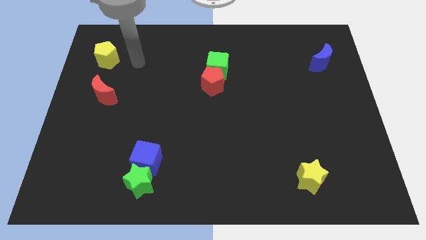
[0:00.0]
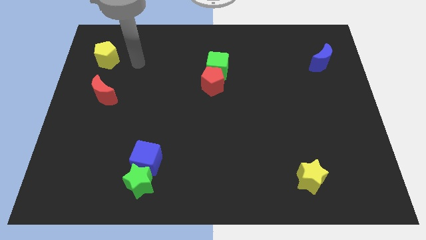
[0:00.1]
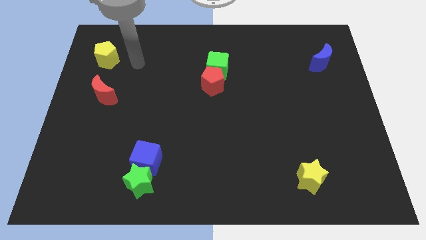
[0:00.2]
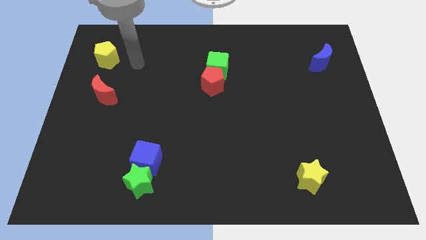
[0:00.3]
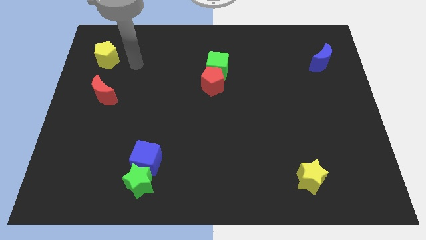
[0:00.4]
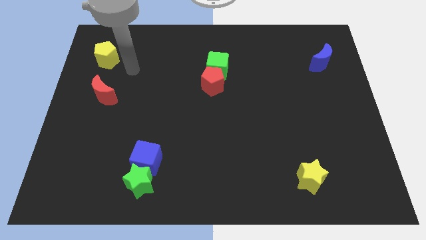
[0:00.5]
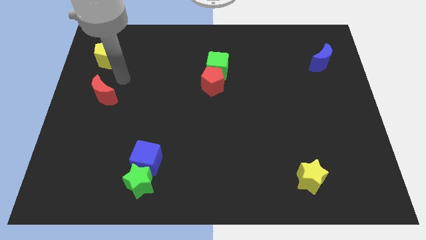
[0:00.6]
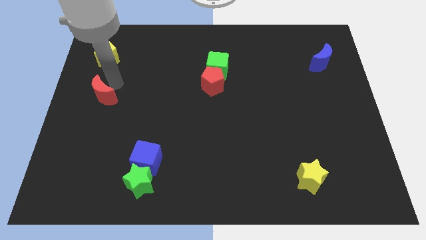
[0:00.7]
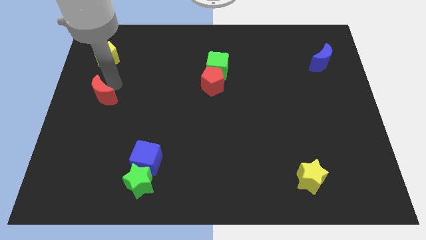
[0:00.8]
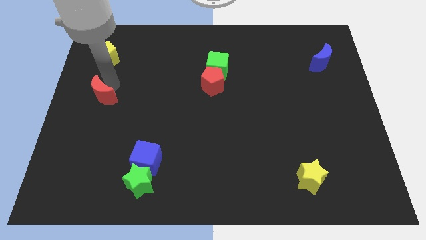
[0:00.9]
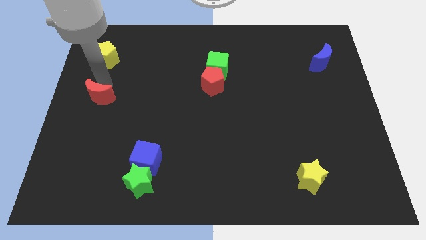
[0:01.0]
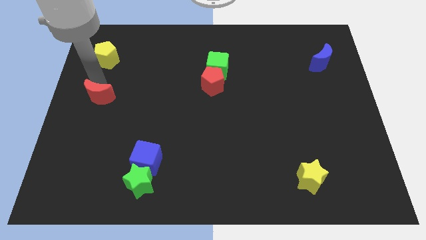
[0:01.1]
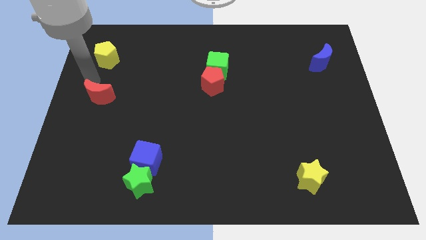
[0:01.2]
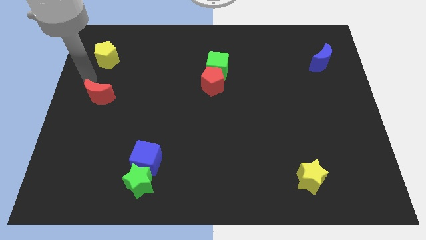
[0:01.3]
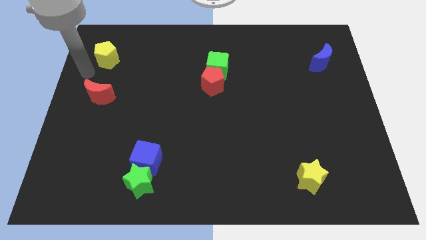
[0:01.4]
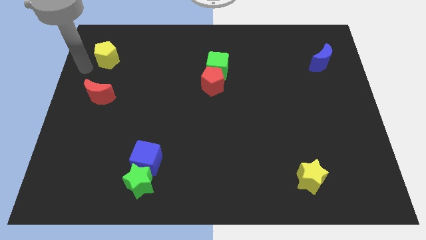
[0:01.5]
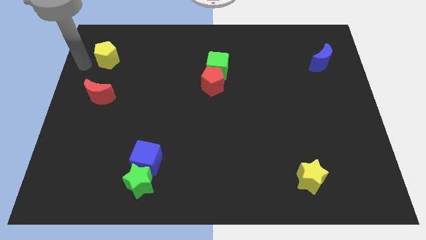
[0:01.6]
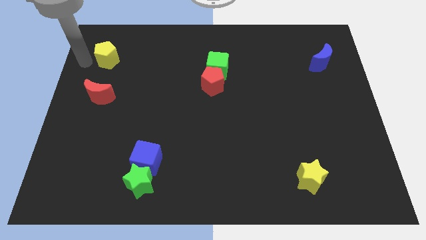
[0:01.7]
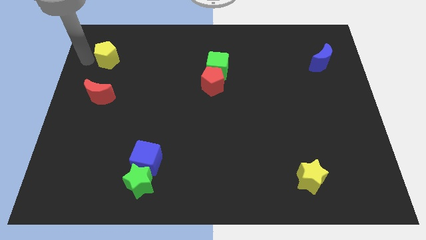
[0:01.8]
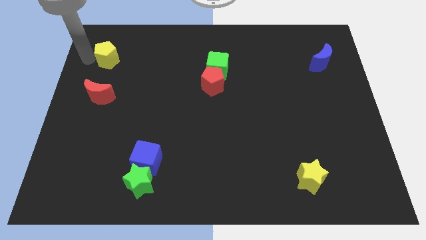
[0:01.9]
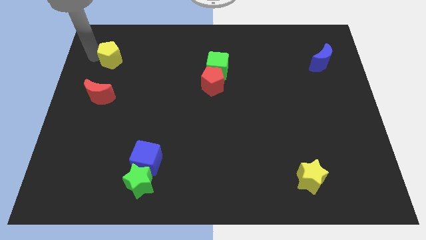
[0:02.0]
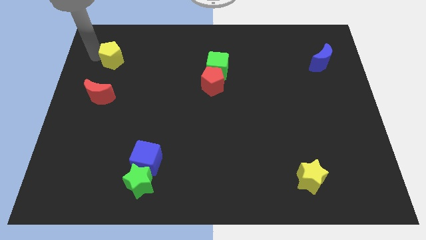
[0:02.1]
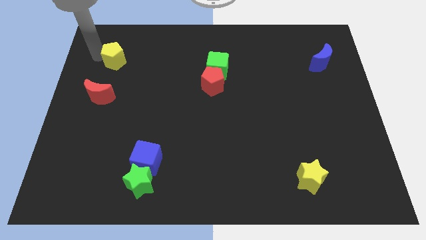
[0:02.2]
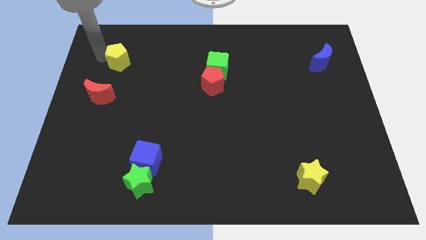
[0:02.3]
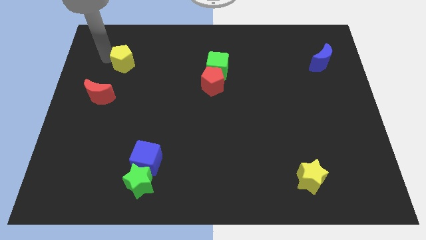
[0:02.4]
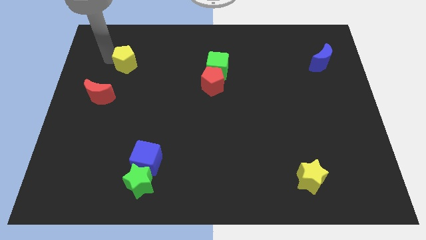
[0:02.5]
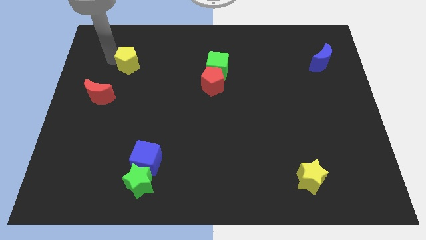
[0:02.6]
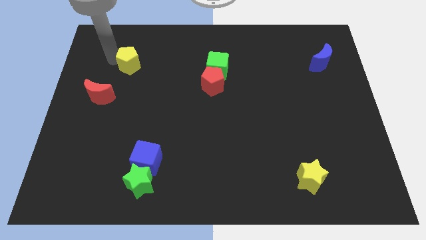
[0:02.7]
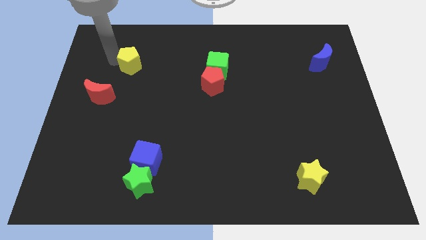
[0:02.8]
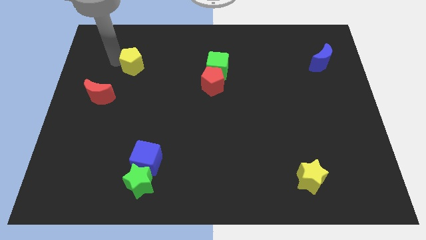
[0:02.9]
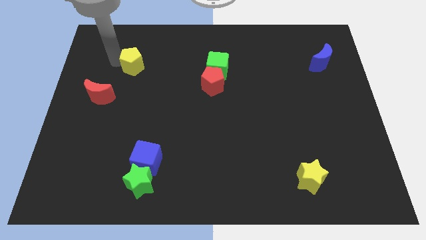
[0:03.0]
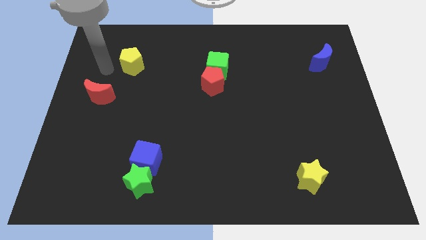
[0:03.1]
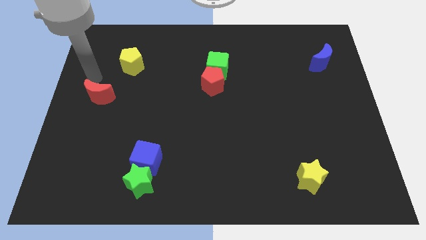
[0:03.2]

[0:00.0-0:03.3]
place the yellow pentagon diagonal to the red moon

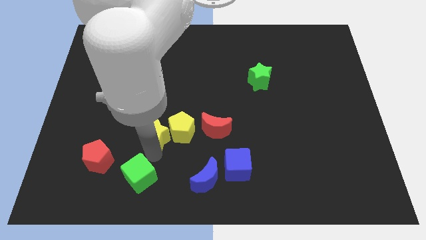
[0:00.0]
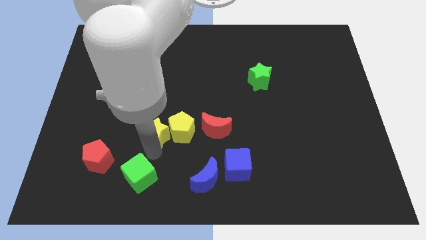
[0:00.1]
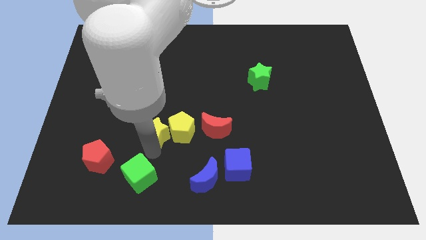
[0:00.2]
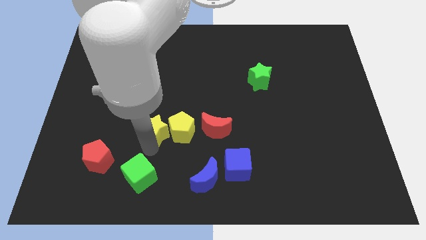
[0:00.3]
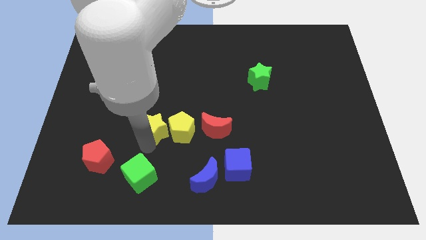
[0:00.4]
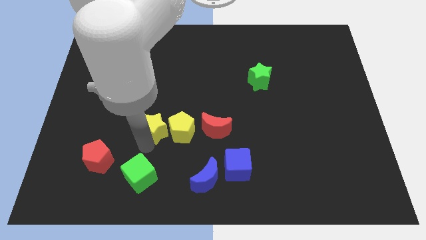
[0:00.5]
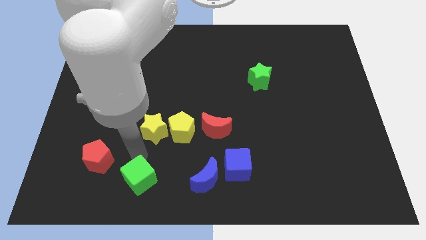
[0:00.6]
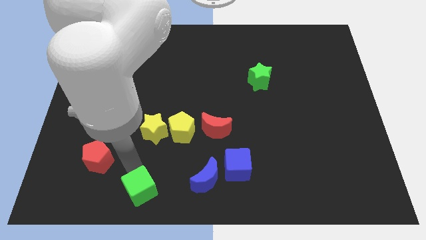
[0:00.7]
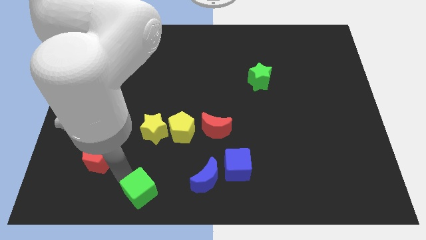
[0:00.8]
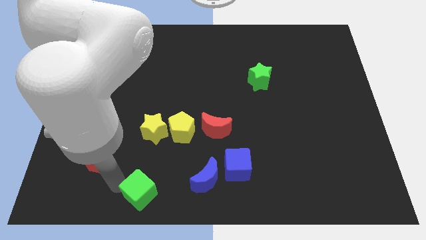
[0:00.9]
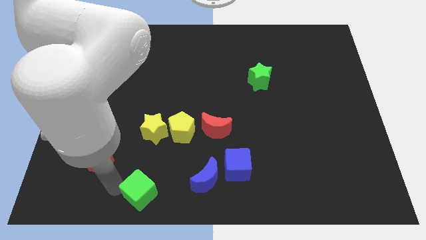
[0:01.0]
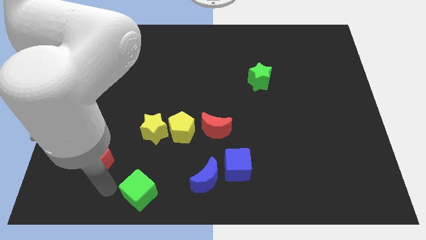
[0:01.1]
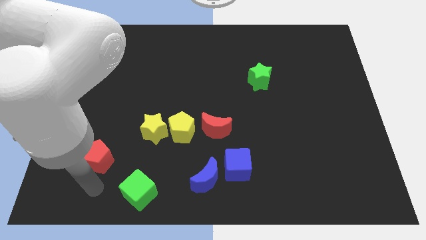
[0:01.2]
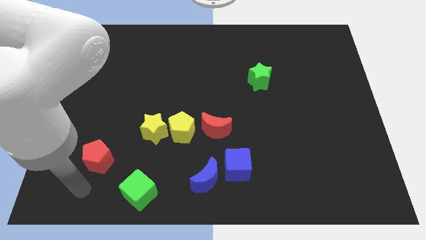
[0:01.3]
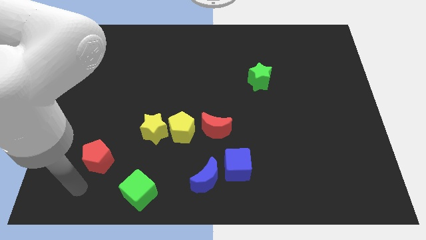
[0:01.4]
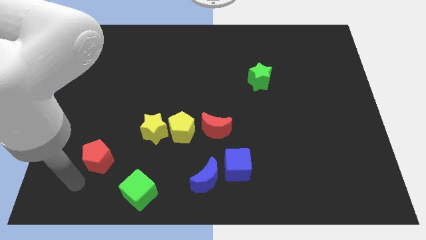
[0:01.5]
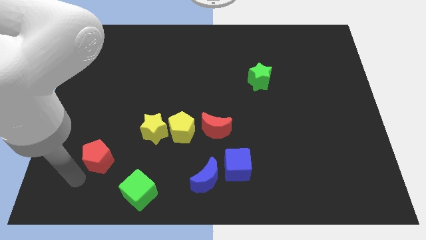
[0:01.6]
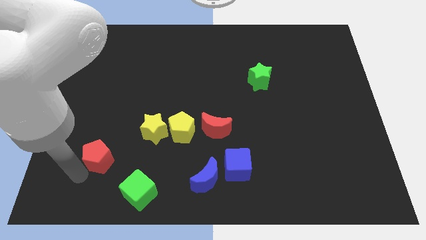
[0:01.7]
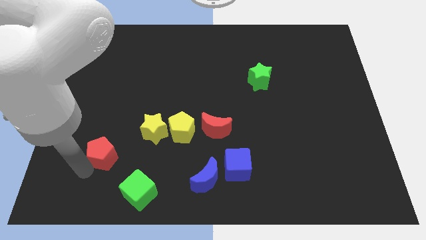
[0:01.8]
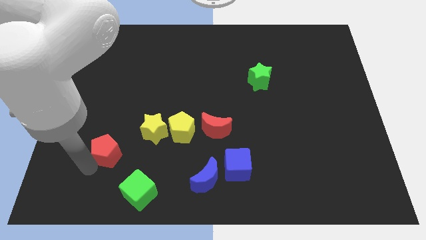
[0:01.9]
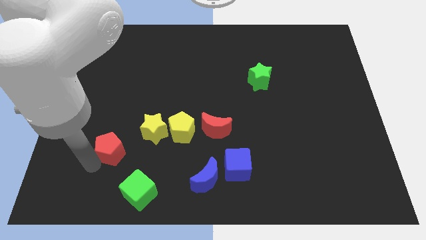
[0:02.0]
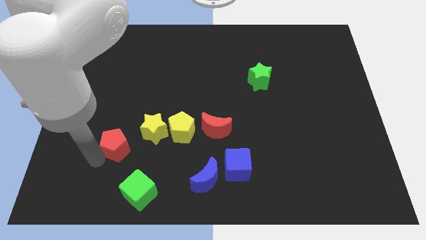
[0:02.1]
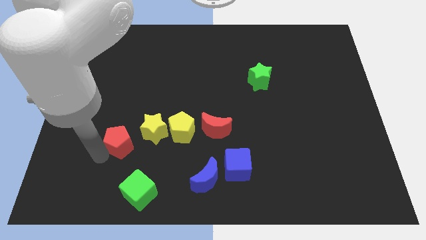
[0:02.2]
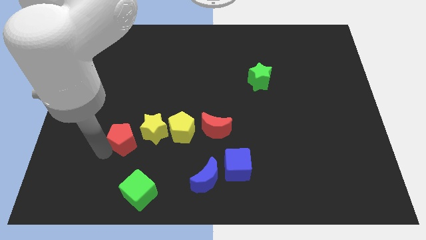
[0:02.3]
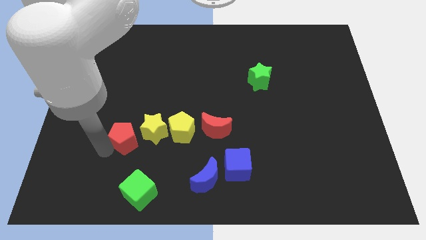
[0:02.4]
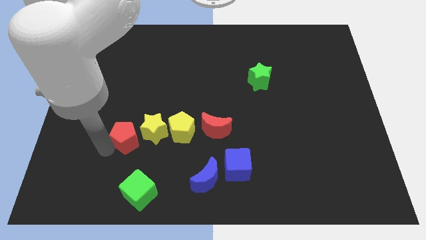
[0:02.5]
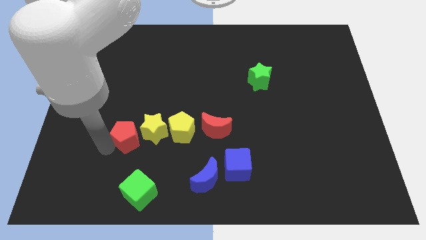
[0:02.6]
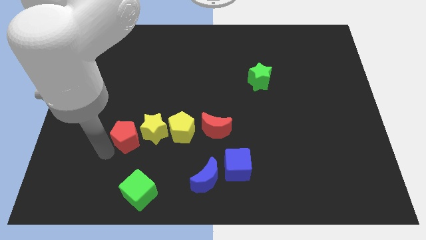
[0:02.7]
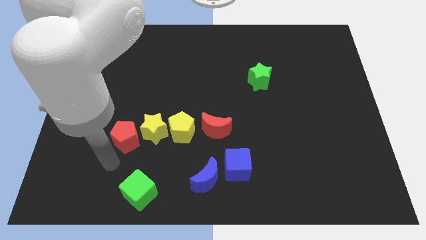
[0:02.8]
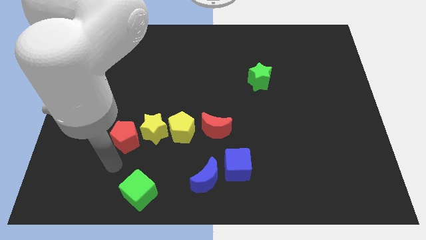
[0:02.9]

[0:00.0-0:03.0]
move red pentagon left beside the yellow star

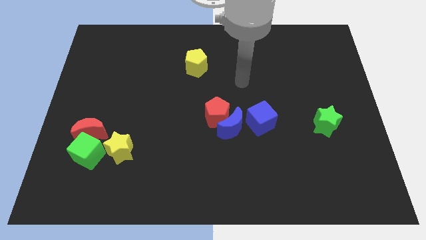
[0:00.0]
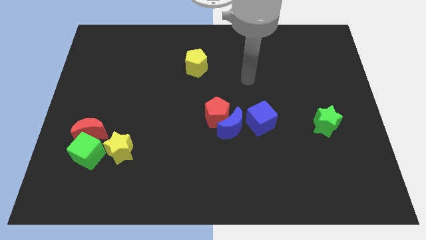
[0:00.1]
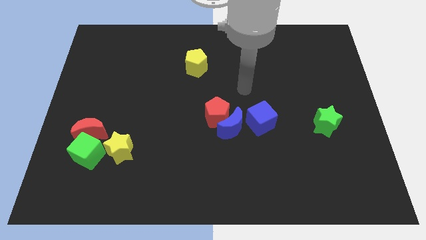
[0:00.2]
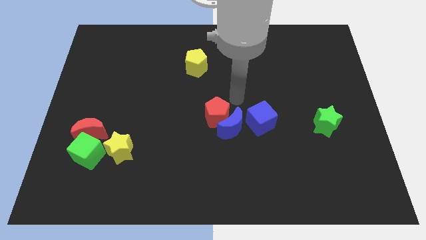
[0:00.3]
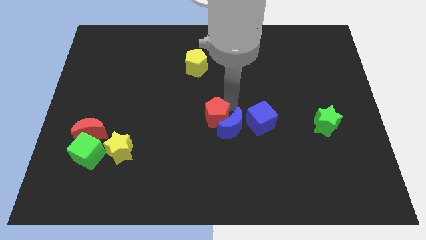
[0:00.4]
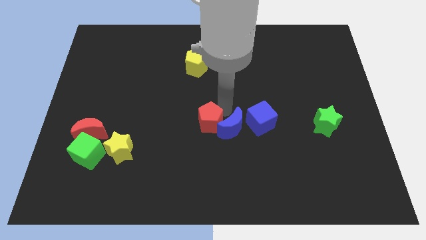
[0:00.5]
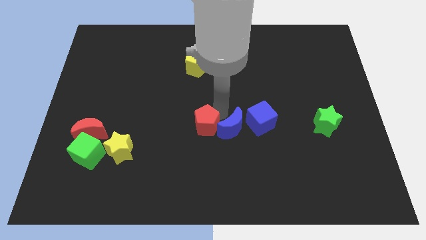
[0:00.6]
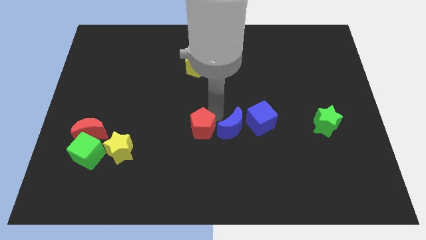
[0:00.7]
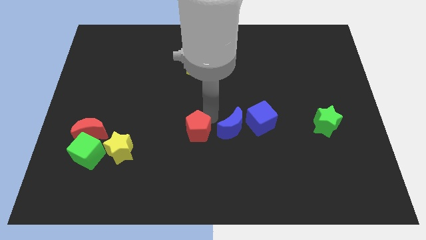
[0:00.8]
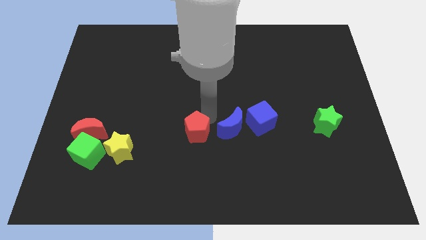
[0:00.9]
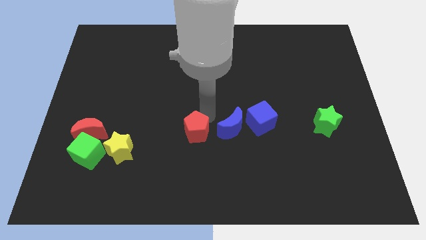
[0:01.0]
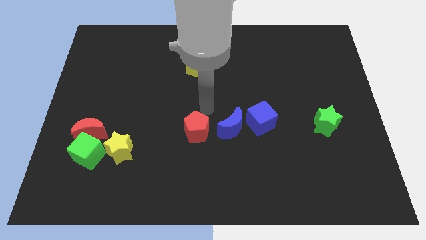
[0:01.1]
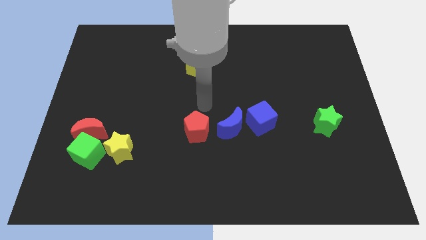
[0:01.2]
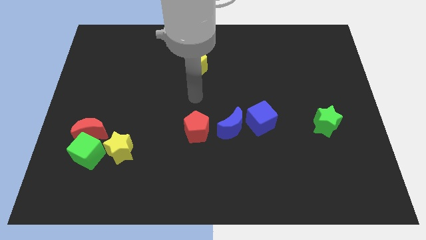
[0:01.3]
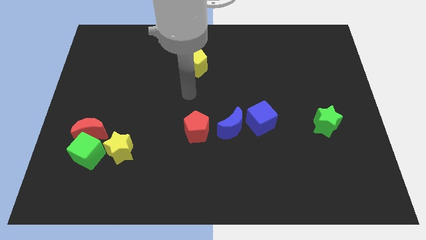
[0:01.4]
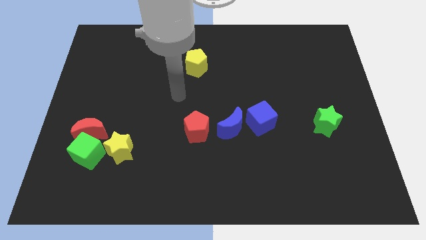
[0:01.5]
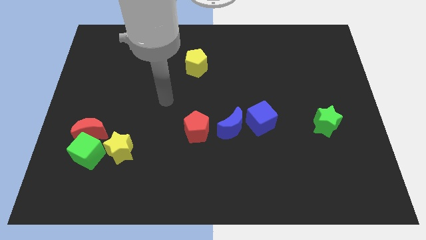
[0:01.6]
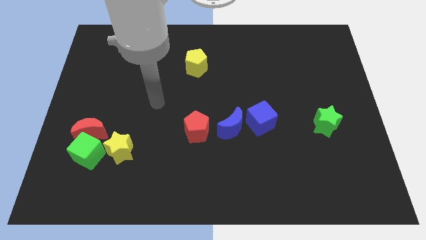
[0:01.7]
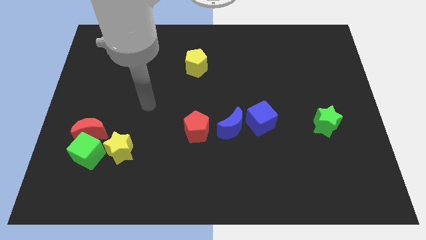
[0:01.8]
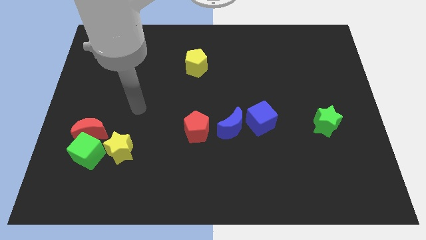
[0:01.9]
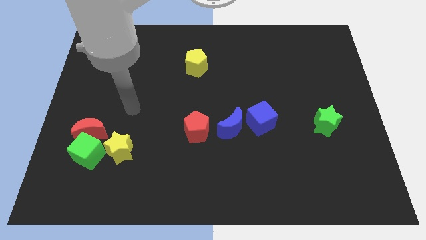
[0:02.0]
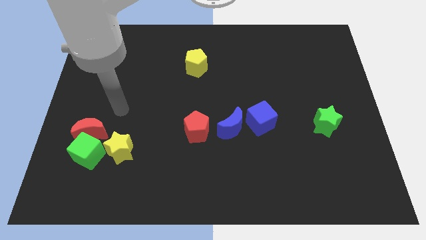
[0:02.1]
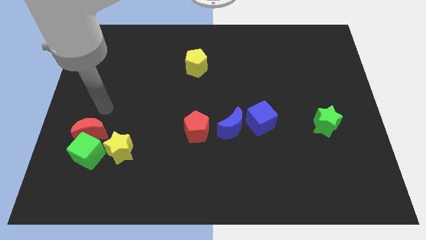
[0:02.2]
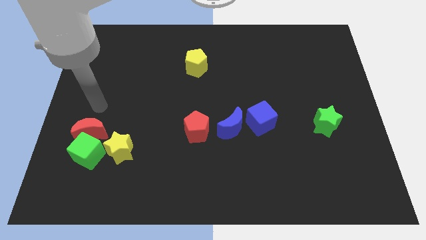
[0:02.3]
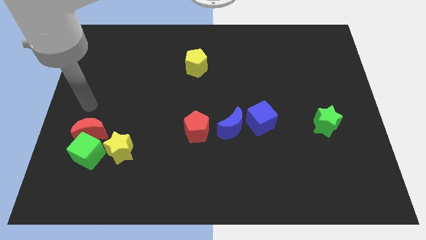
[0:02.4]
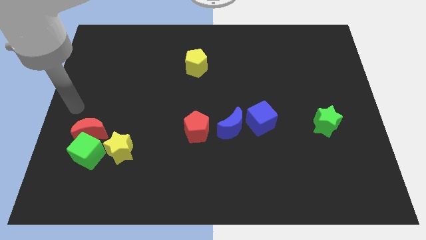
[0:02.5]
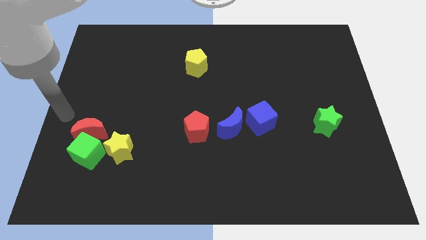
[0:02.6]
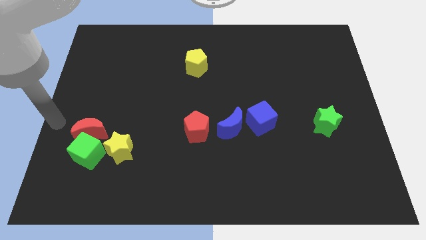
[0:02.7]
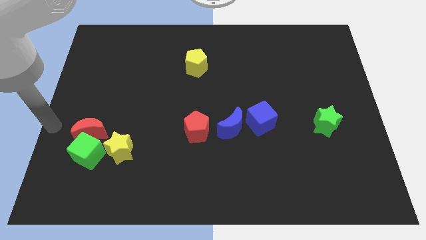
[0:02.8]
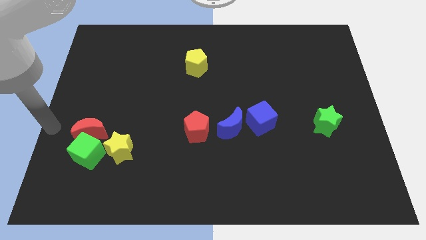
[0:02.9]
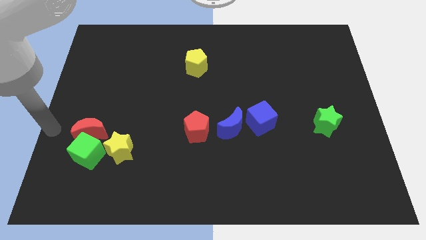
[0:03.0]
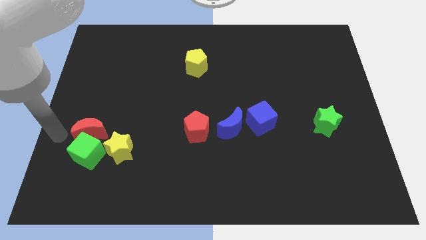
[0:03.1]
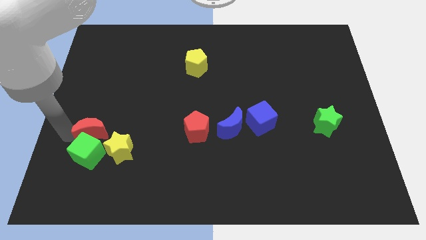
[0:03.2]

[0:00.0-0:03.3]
place the red pentagon left to the blue moon
